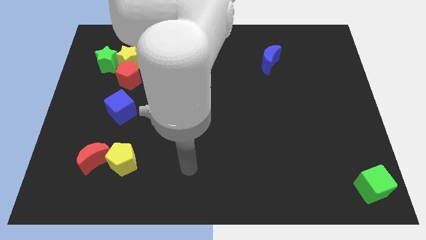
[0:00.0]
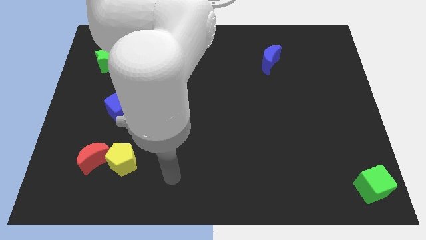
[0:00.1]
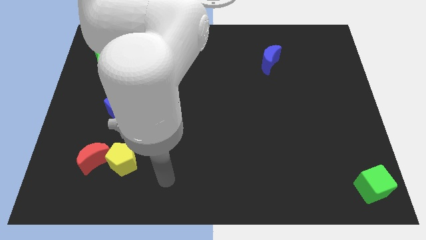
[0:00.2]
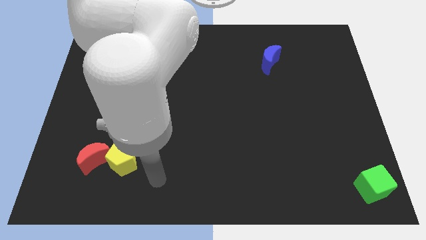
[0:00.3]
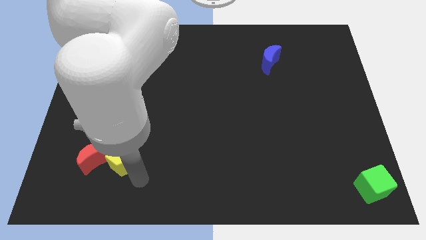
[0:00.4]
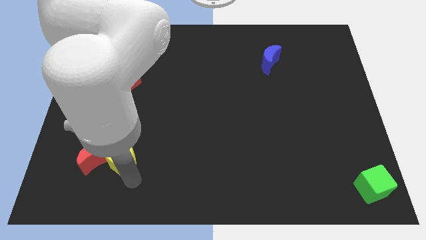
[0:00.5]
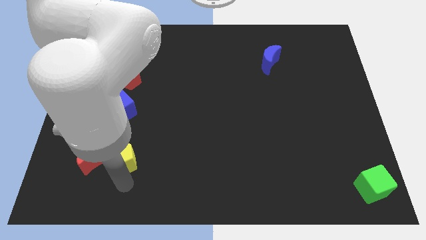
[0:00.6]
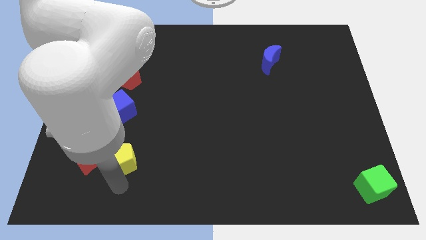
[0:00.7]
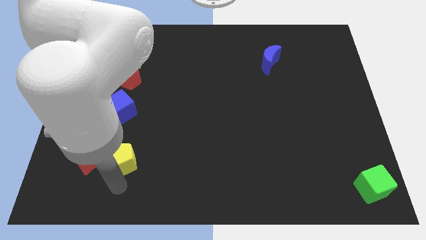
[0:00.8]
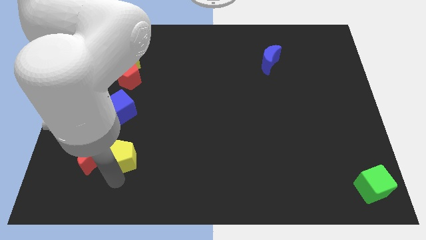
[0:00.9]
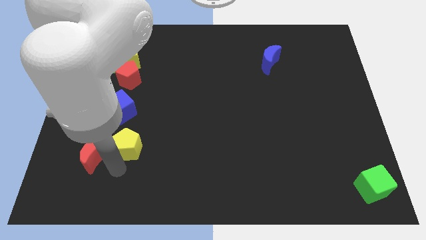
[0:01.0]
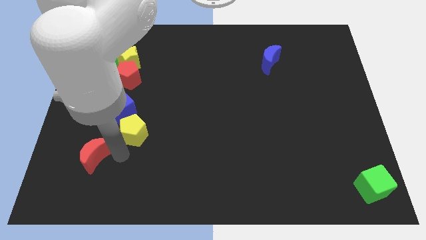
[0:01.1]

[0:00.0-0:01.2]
separate the yellow pentagon away from the red crescent

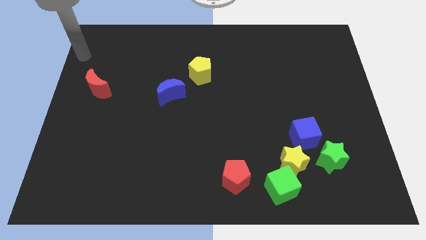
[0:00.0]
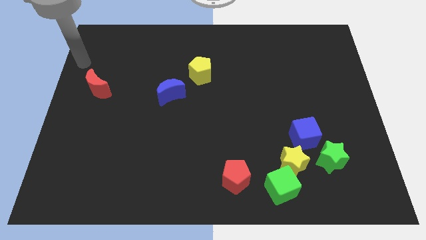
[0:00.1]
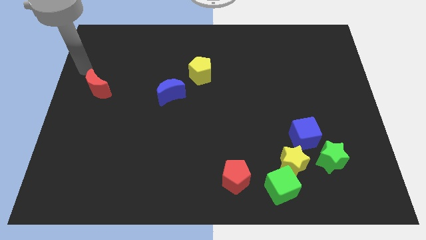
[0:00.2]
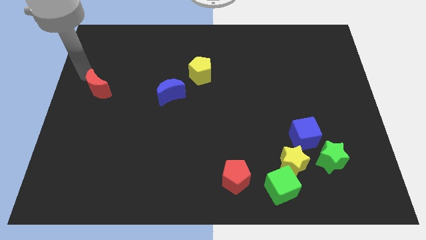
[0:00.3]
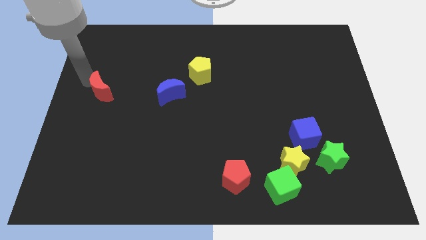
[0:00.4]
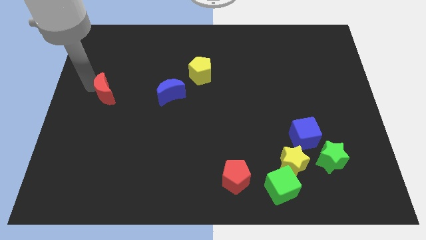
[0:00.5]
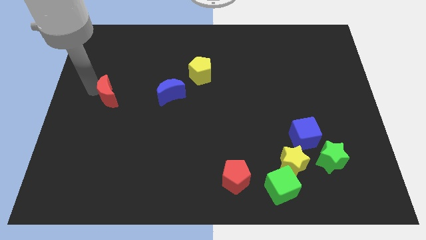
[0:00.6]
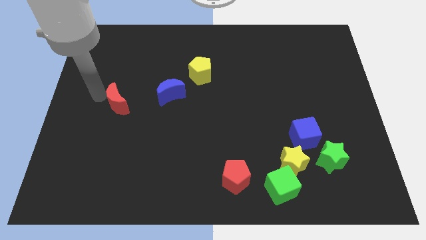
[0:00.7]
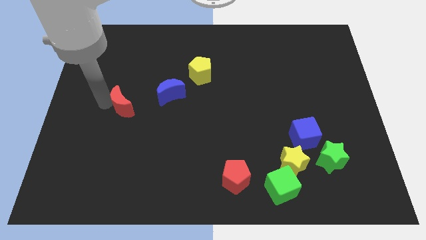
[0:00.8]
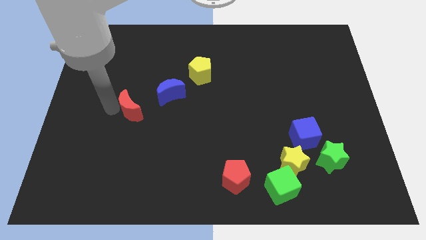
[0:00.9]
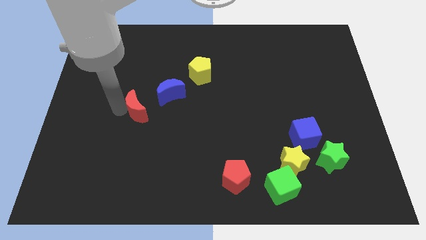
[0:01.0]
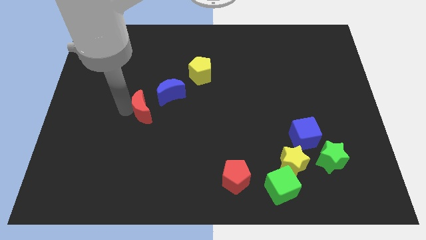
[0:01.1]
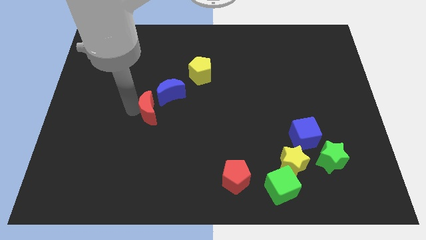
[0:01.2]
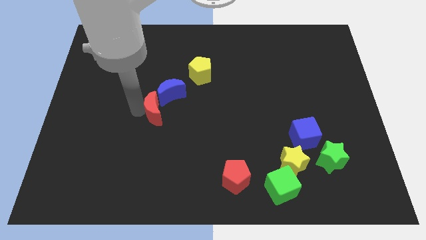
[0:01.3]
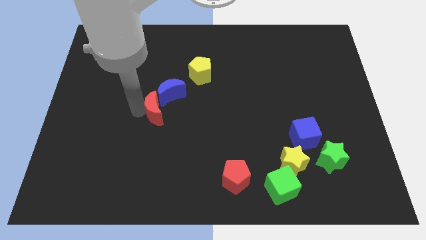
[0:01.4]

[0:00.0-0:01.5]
place red crescent to the left of blue crescent

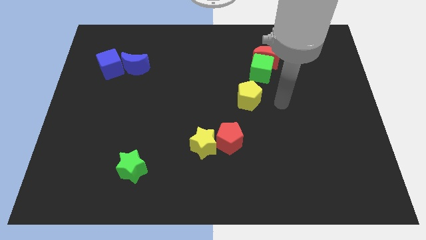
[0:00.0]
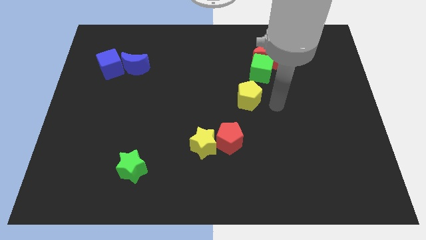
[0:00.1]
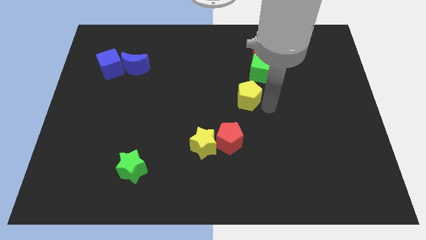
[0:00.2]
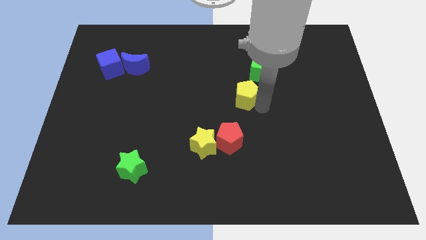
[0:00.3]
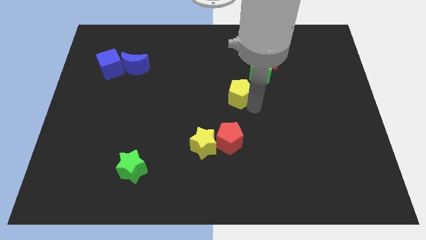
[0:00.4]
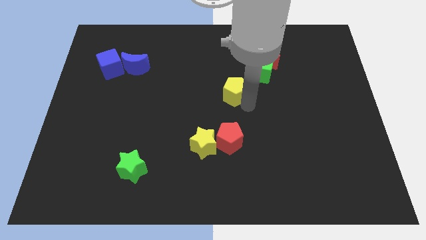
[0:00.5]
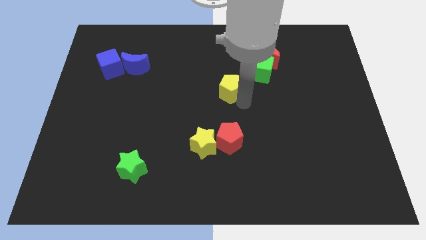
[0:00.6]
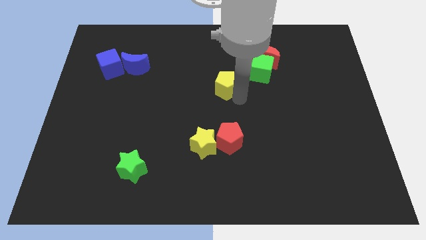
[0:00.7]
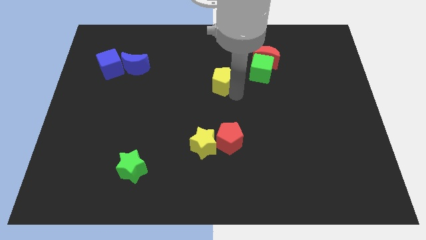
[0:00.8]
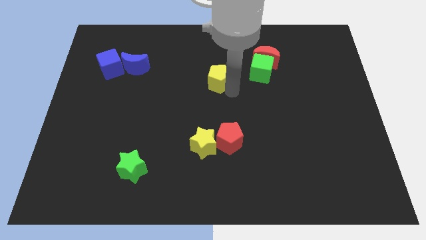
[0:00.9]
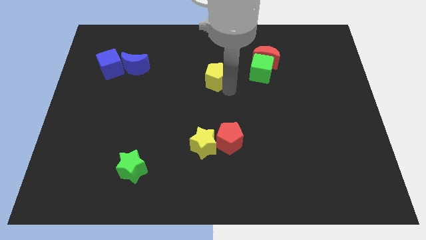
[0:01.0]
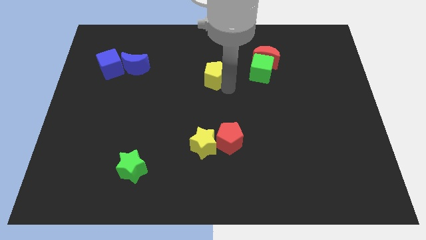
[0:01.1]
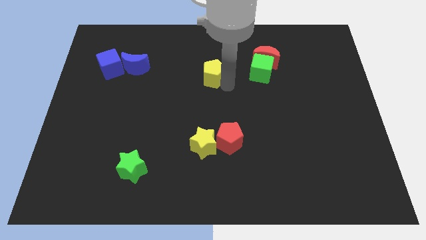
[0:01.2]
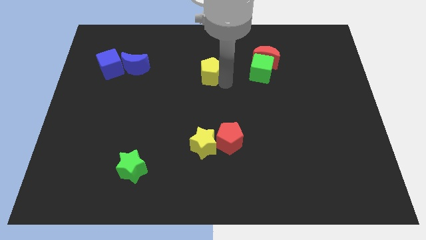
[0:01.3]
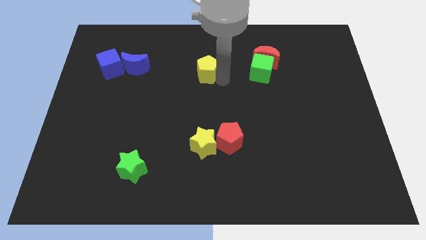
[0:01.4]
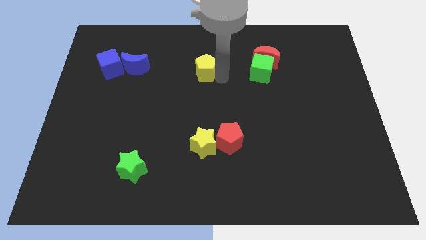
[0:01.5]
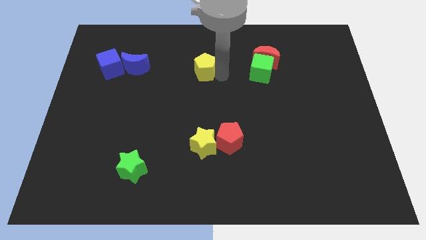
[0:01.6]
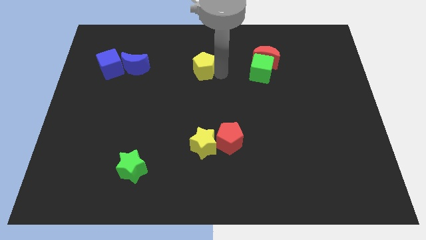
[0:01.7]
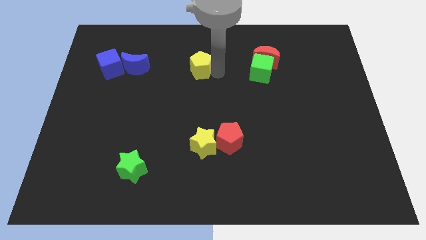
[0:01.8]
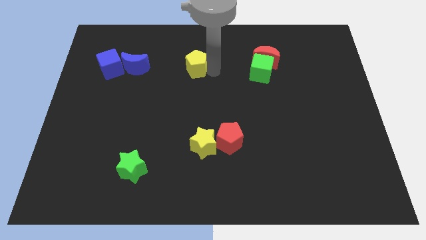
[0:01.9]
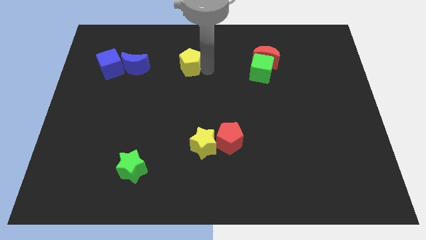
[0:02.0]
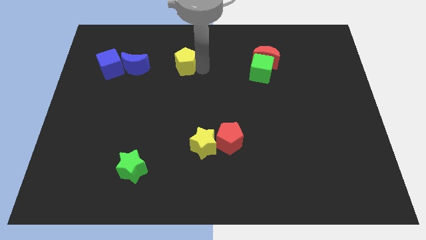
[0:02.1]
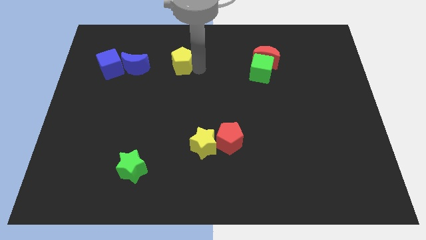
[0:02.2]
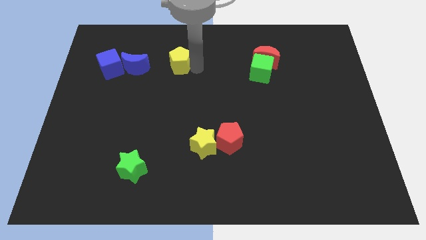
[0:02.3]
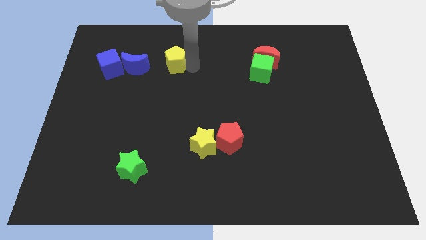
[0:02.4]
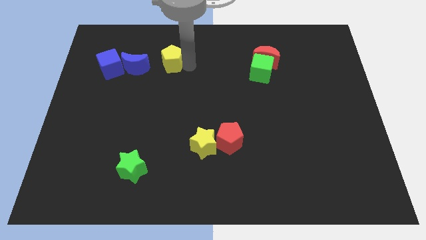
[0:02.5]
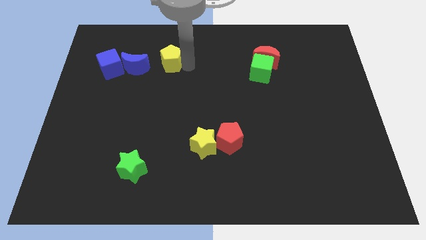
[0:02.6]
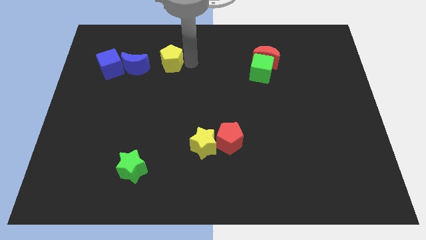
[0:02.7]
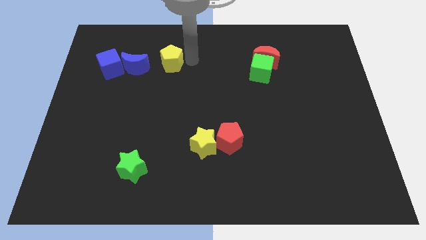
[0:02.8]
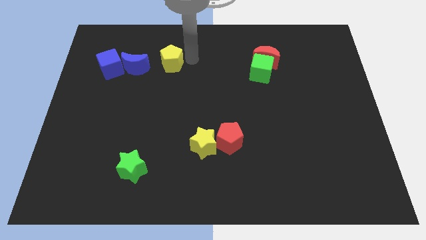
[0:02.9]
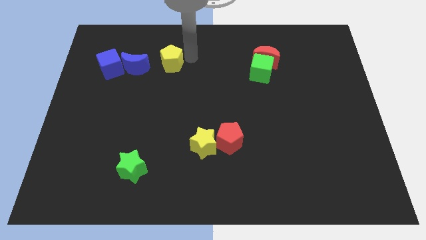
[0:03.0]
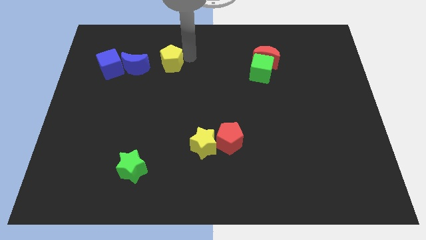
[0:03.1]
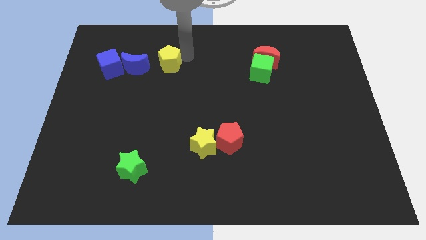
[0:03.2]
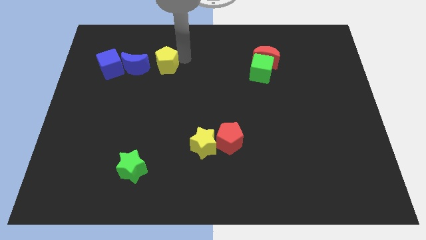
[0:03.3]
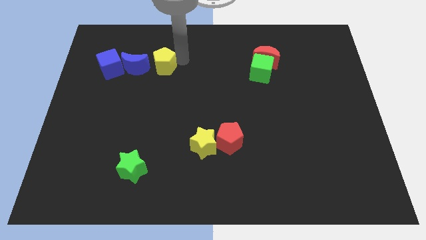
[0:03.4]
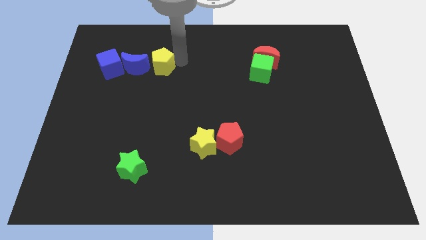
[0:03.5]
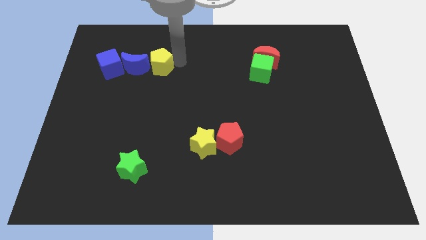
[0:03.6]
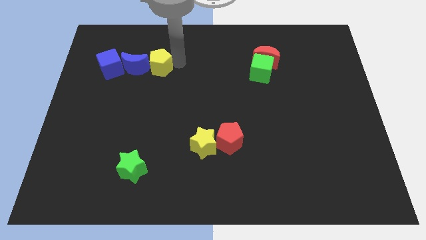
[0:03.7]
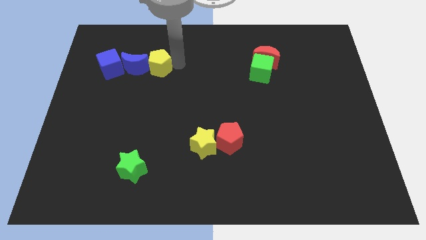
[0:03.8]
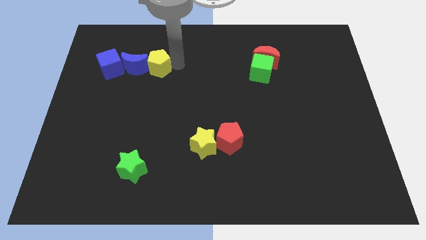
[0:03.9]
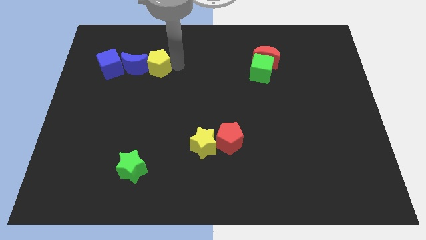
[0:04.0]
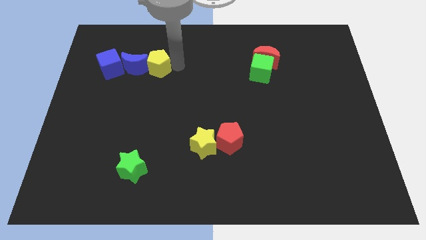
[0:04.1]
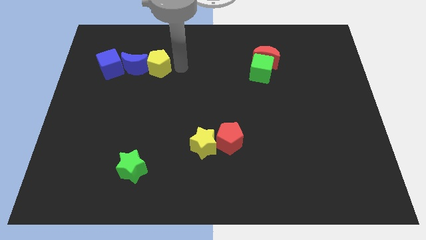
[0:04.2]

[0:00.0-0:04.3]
move the yellow pentagon at the right side of the blue moon

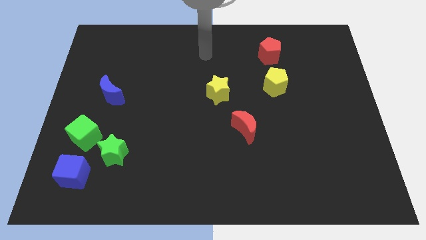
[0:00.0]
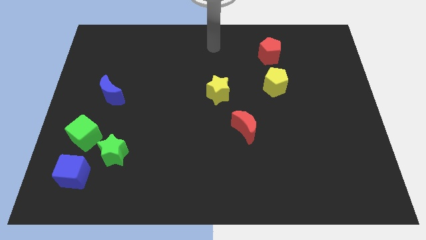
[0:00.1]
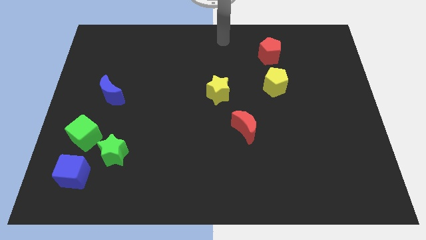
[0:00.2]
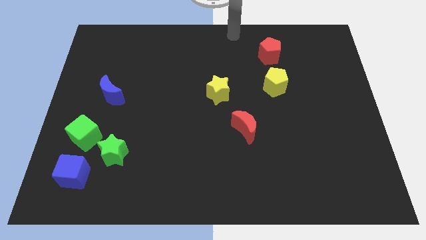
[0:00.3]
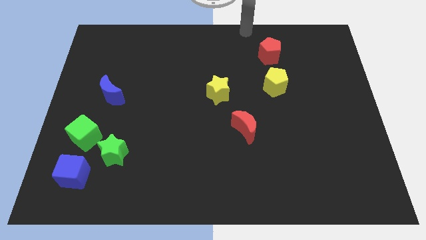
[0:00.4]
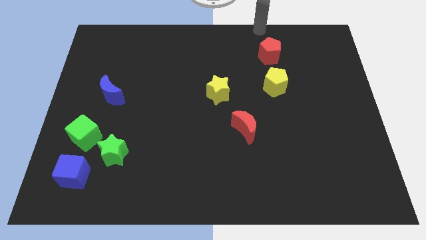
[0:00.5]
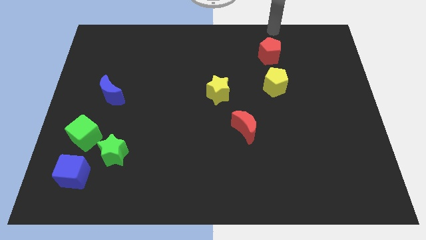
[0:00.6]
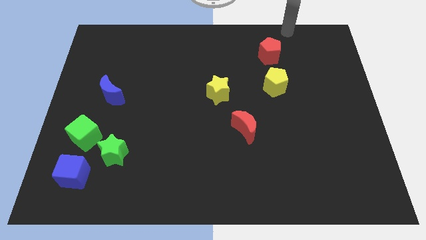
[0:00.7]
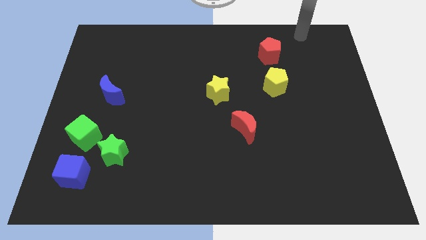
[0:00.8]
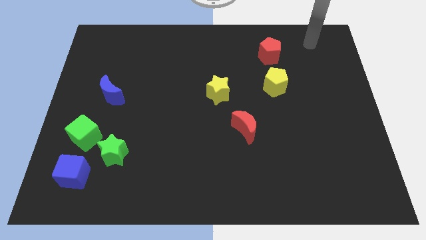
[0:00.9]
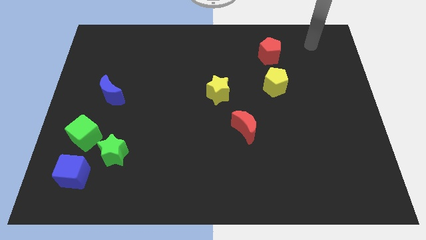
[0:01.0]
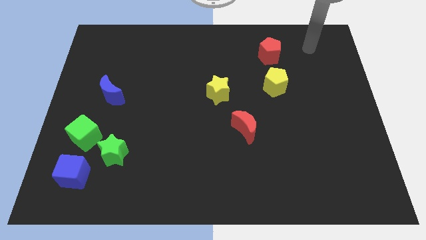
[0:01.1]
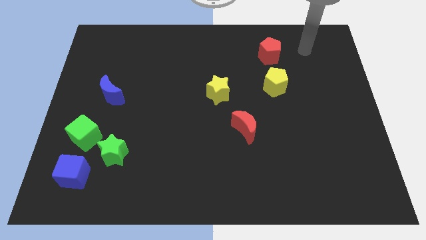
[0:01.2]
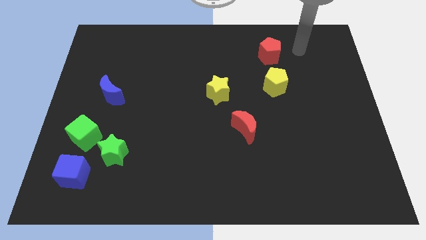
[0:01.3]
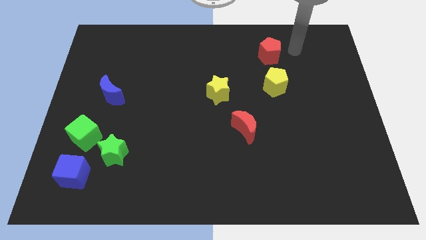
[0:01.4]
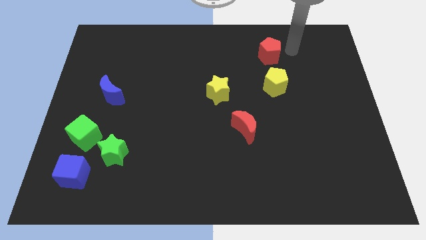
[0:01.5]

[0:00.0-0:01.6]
place your arm at the right of the red pentagon

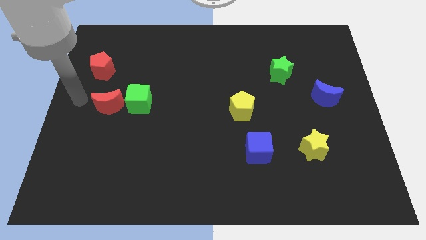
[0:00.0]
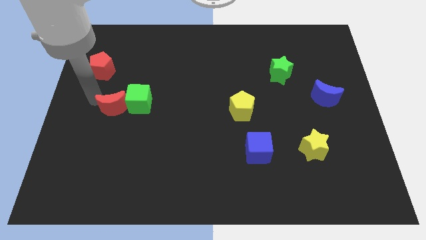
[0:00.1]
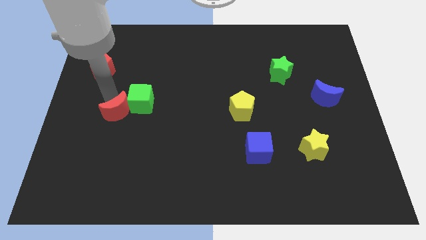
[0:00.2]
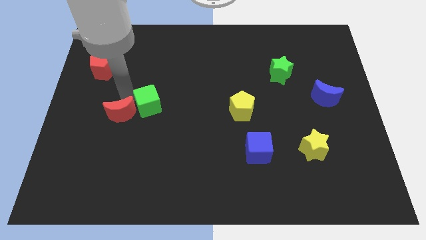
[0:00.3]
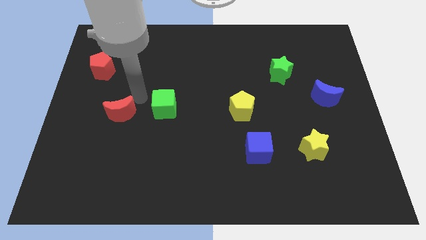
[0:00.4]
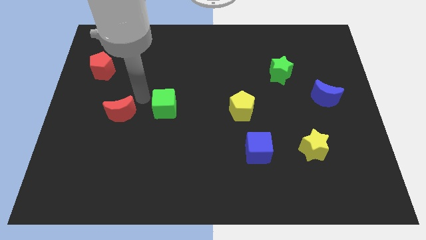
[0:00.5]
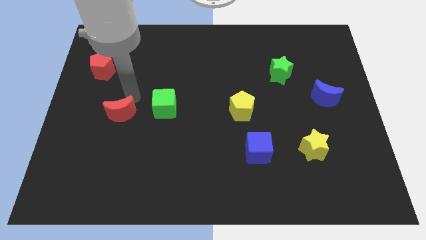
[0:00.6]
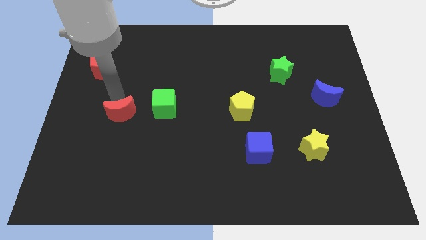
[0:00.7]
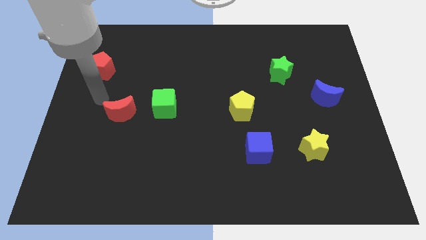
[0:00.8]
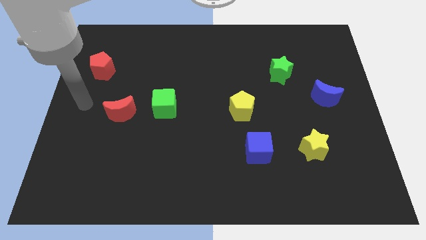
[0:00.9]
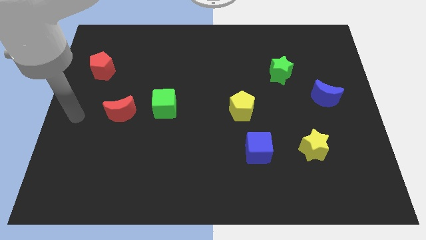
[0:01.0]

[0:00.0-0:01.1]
move the green cube away from the red crescent
